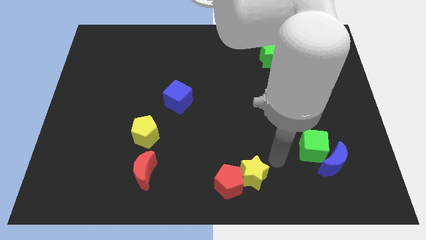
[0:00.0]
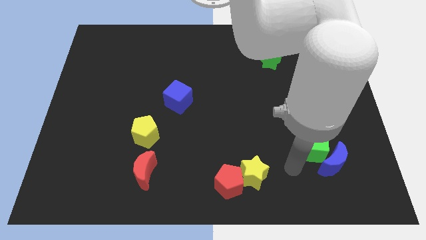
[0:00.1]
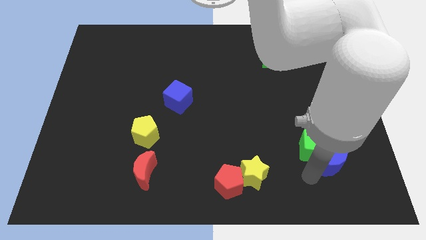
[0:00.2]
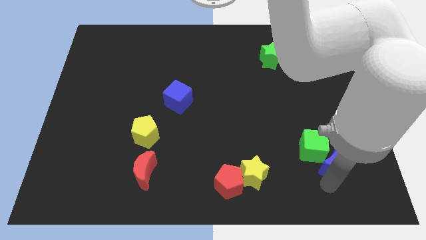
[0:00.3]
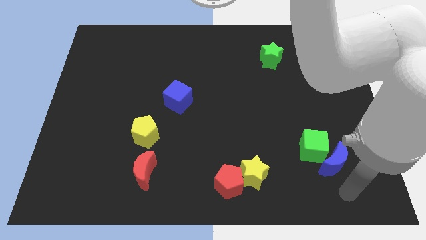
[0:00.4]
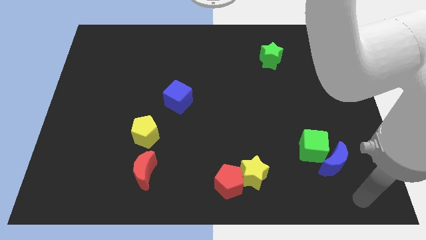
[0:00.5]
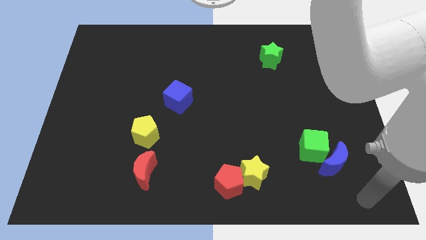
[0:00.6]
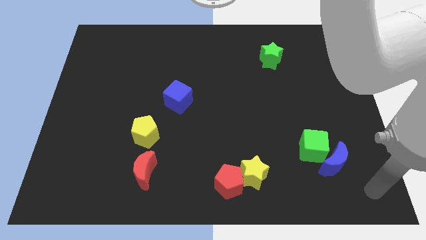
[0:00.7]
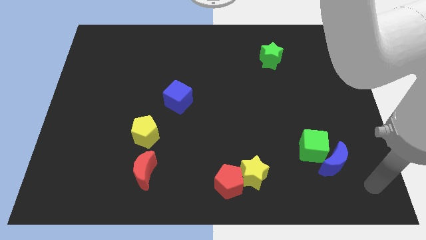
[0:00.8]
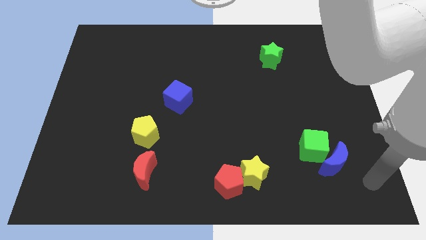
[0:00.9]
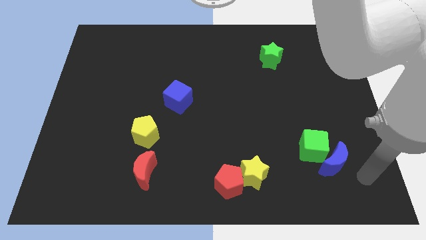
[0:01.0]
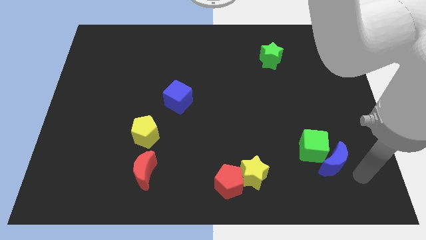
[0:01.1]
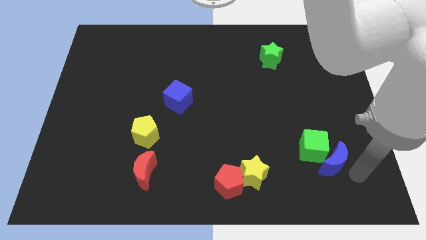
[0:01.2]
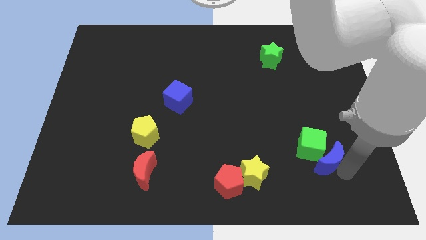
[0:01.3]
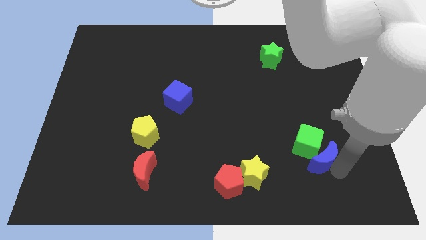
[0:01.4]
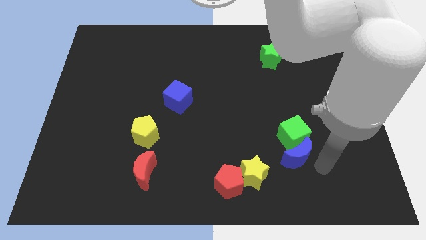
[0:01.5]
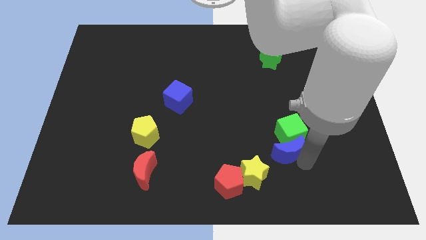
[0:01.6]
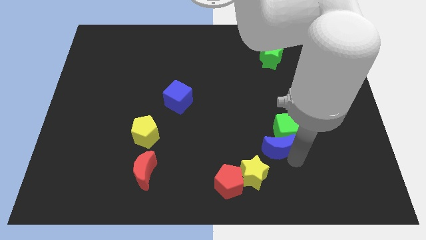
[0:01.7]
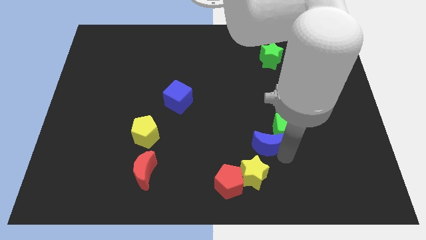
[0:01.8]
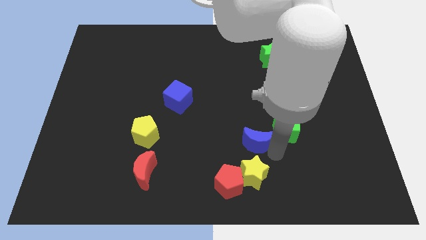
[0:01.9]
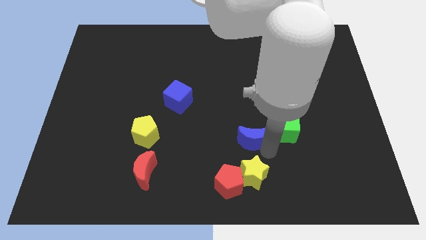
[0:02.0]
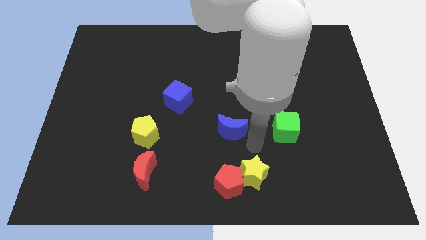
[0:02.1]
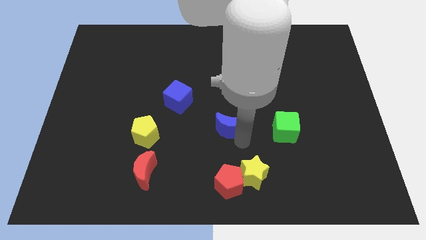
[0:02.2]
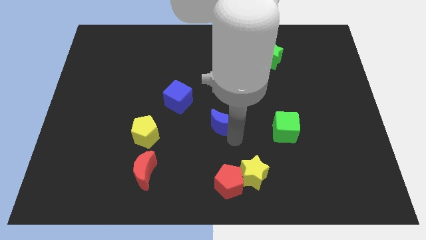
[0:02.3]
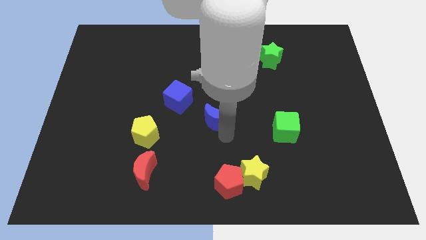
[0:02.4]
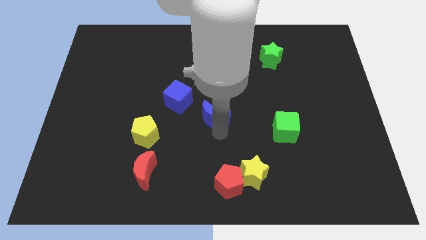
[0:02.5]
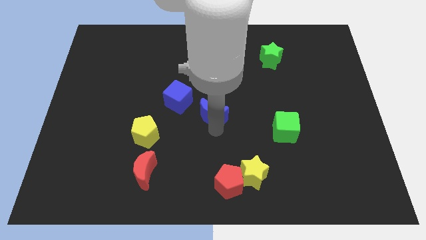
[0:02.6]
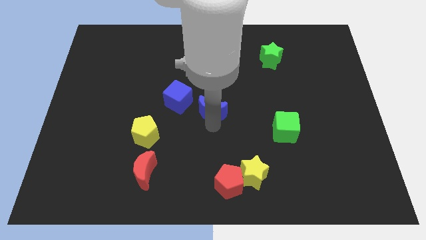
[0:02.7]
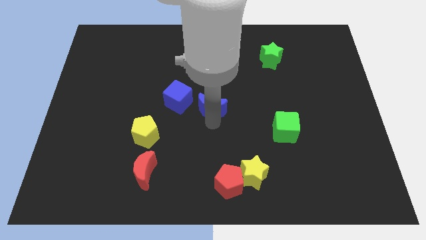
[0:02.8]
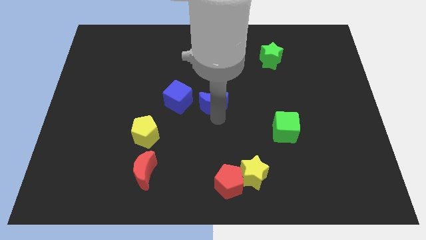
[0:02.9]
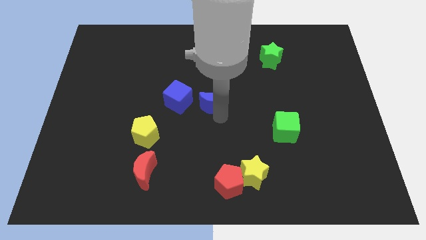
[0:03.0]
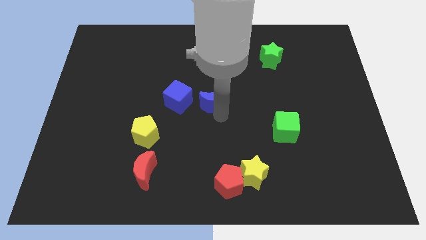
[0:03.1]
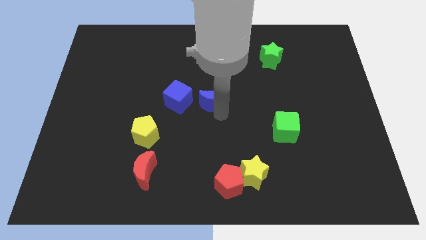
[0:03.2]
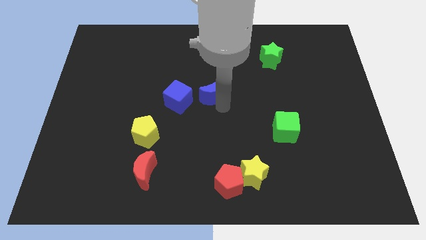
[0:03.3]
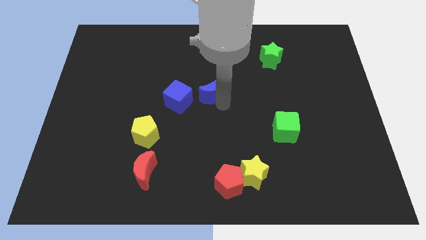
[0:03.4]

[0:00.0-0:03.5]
place the blue crescent above the red pentagon

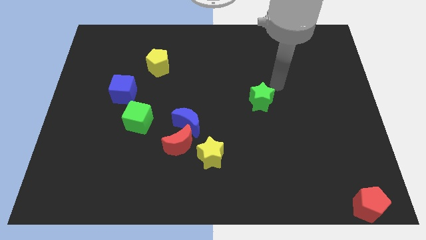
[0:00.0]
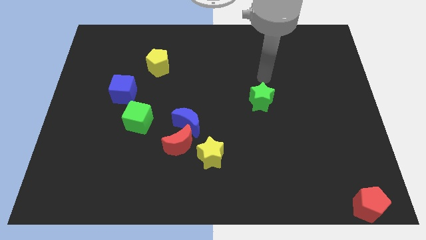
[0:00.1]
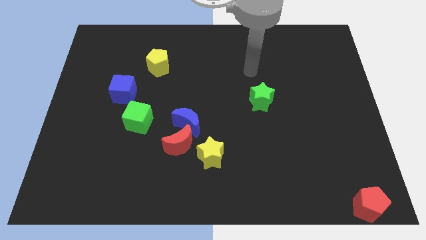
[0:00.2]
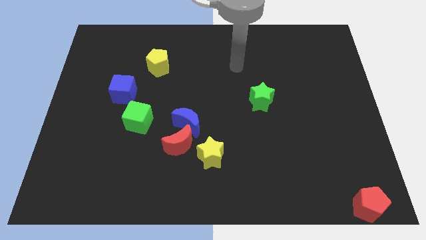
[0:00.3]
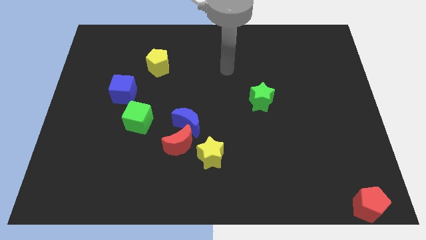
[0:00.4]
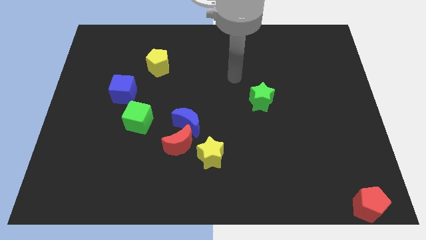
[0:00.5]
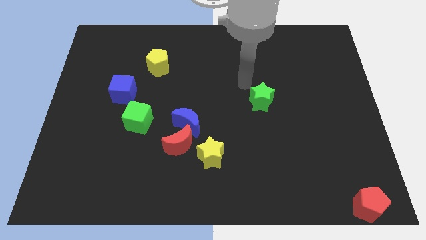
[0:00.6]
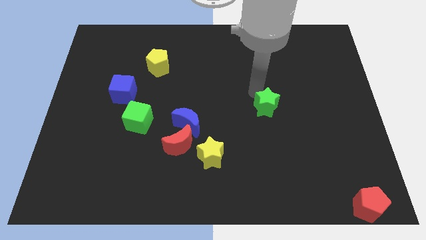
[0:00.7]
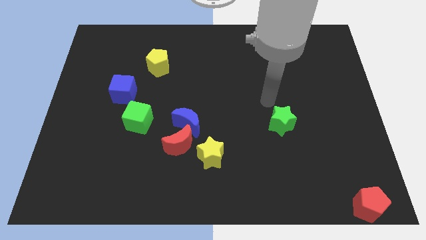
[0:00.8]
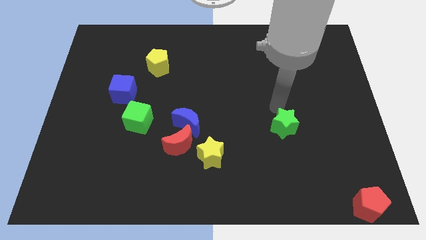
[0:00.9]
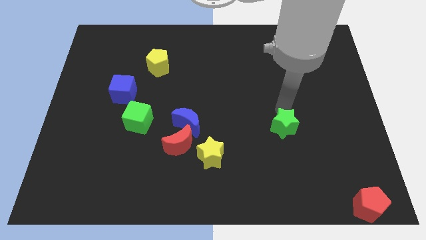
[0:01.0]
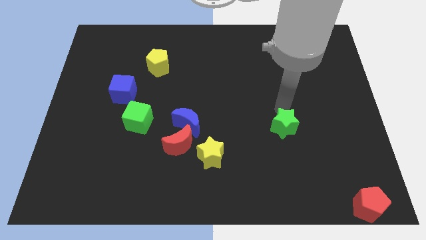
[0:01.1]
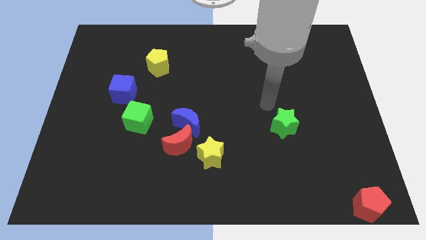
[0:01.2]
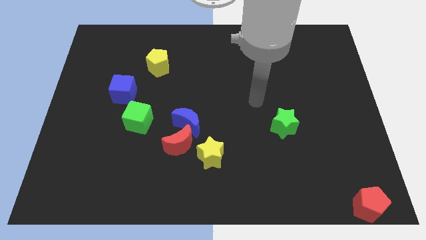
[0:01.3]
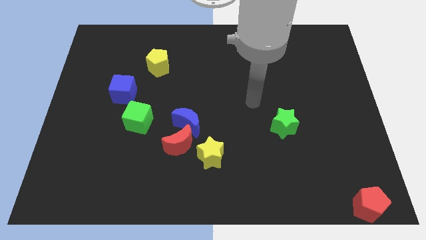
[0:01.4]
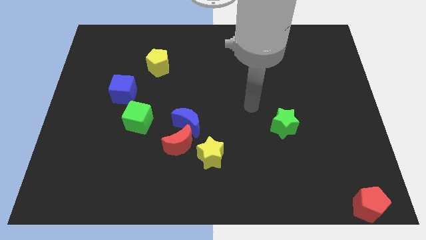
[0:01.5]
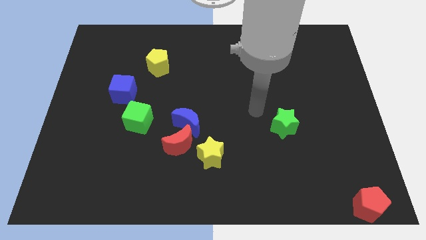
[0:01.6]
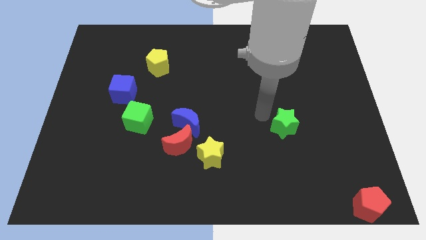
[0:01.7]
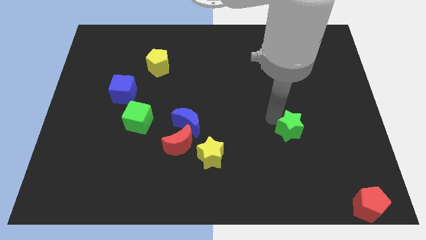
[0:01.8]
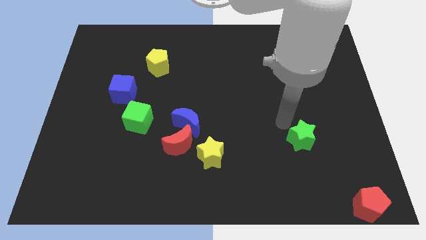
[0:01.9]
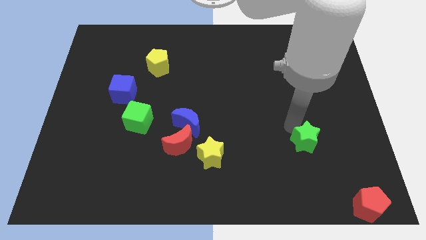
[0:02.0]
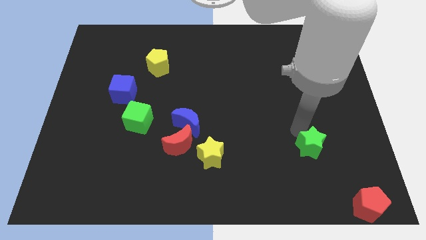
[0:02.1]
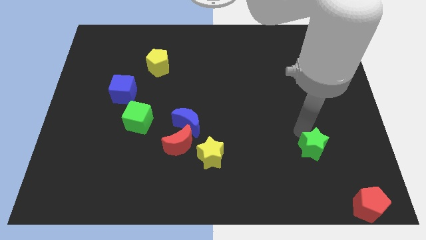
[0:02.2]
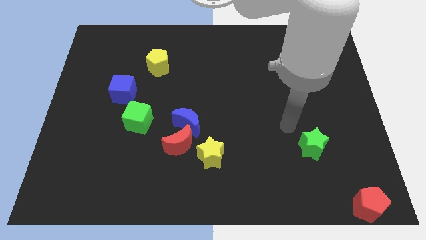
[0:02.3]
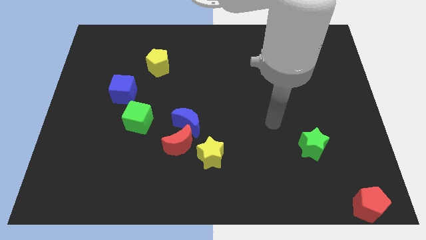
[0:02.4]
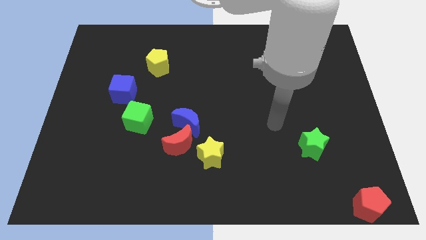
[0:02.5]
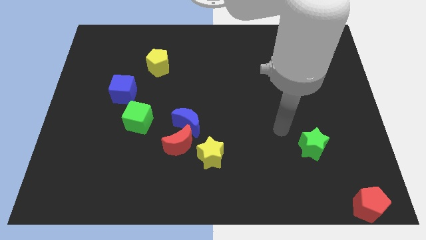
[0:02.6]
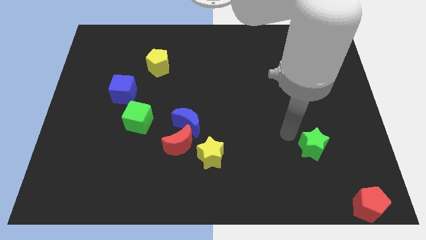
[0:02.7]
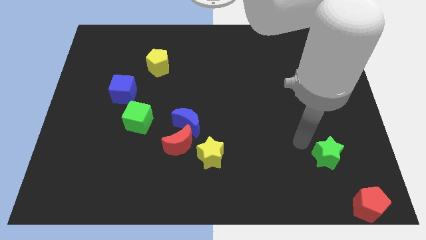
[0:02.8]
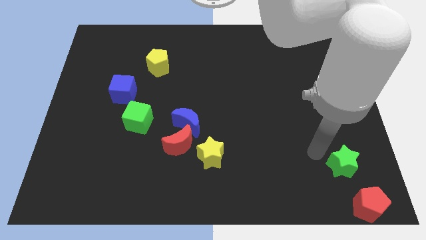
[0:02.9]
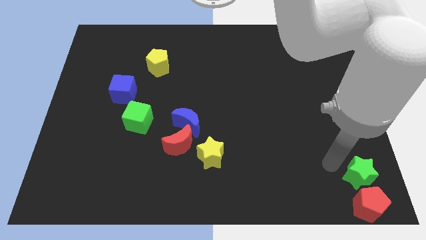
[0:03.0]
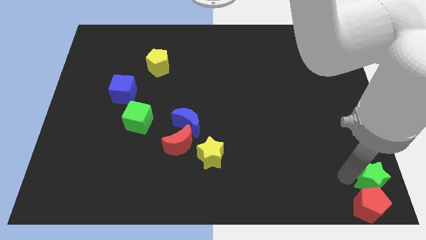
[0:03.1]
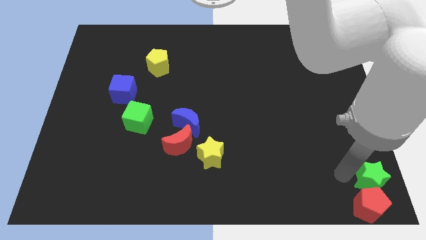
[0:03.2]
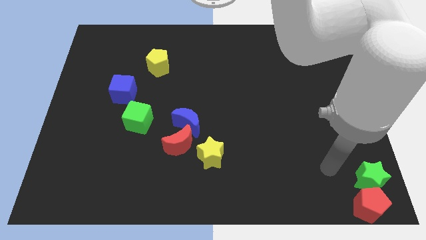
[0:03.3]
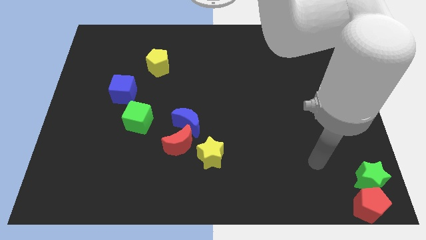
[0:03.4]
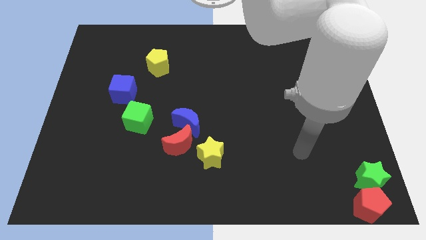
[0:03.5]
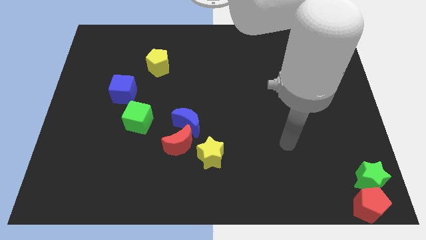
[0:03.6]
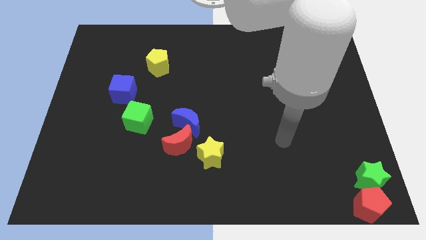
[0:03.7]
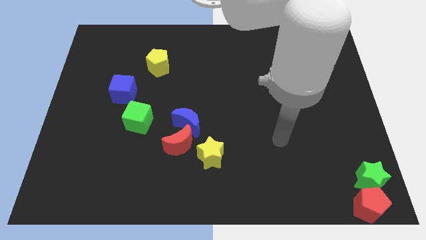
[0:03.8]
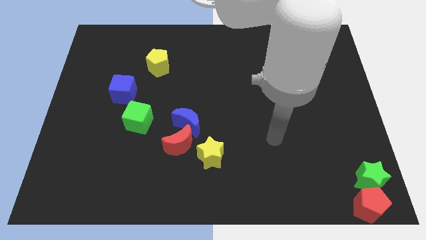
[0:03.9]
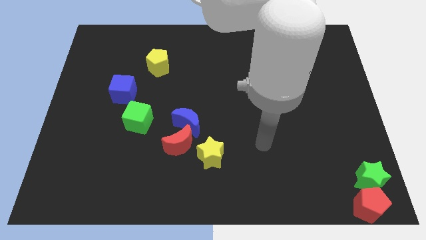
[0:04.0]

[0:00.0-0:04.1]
place green star into red pentagon

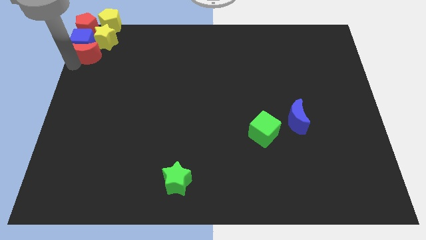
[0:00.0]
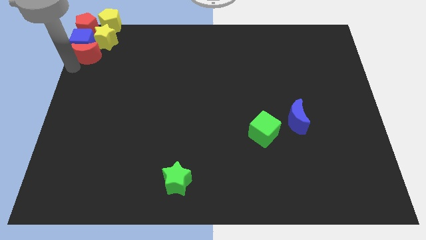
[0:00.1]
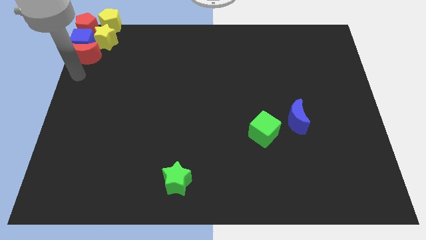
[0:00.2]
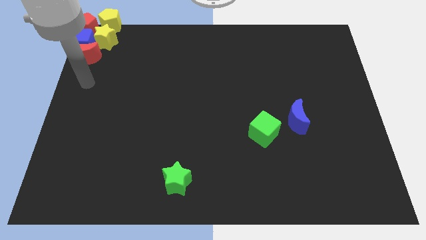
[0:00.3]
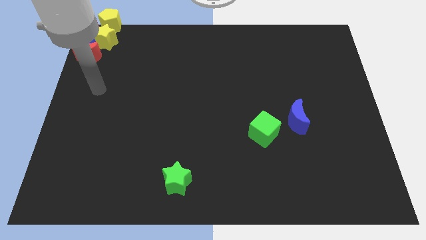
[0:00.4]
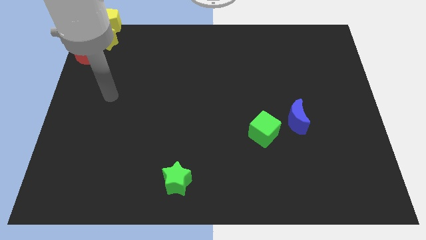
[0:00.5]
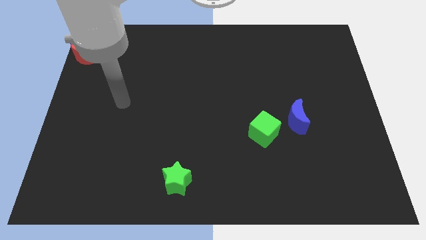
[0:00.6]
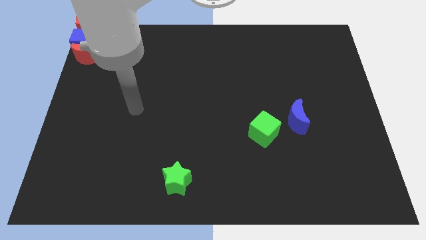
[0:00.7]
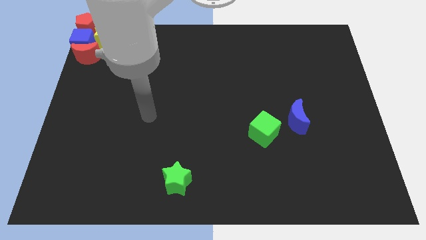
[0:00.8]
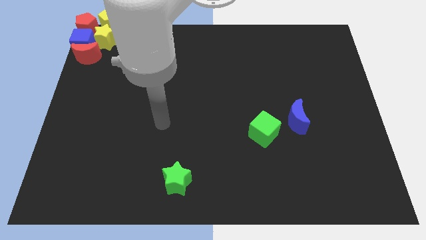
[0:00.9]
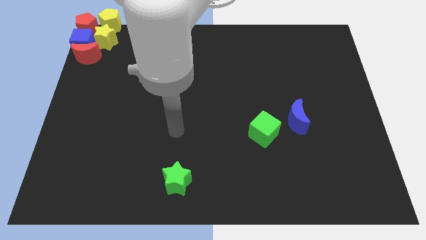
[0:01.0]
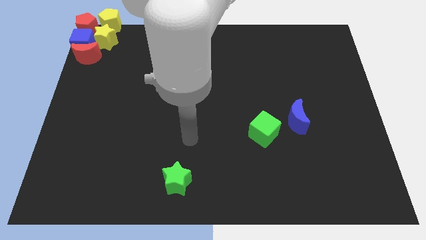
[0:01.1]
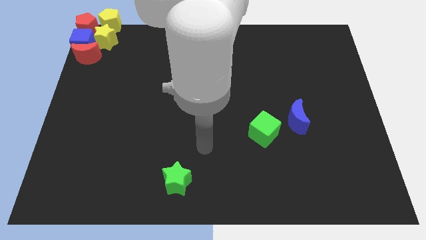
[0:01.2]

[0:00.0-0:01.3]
move the arm away from the red moon

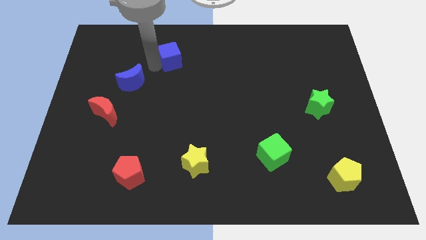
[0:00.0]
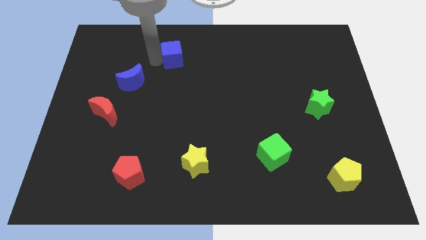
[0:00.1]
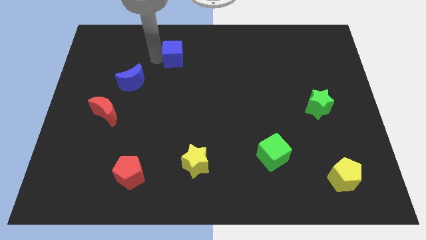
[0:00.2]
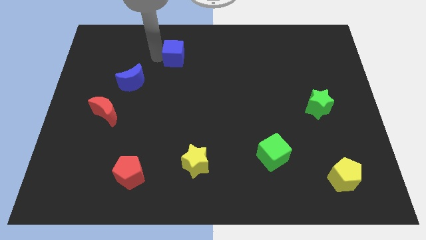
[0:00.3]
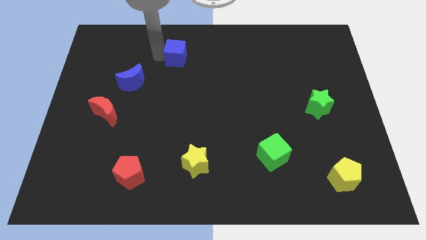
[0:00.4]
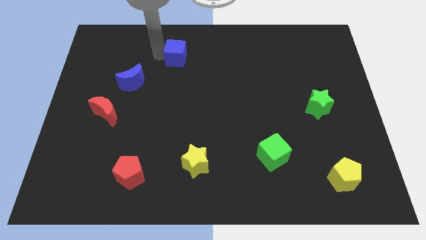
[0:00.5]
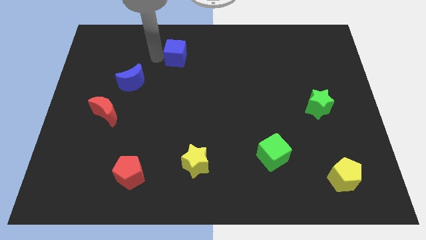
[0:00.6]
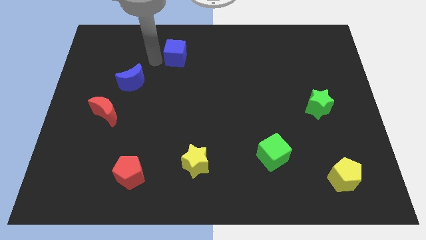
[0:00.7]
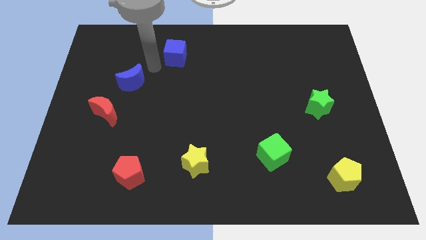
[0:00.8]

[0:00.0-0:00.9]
slightly push the blue cube upward
